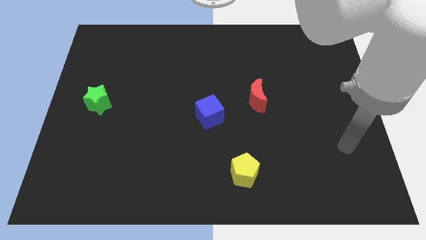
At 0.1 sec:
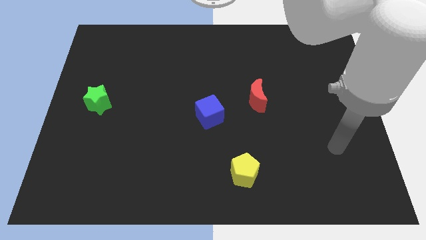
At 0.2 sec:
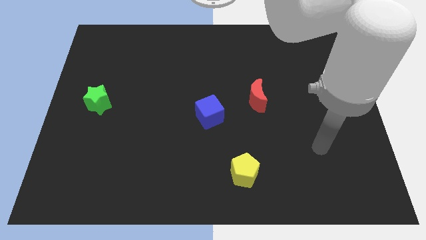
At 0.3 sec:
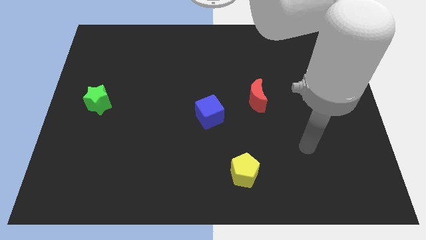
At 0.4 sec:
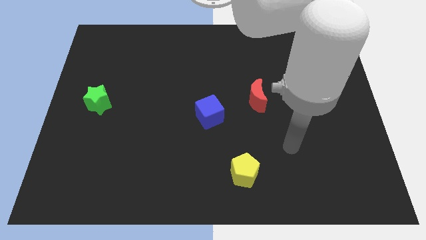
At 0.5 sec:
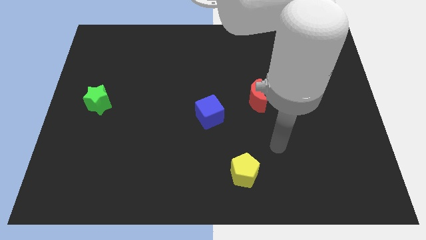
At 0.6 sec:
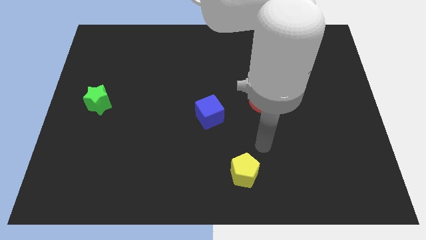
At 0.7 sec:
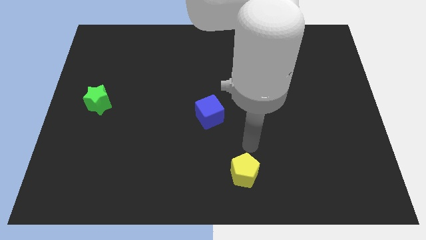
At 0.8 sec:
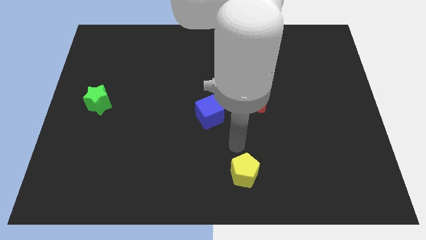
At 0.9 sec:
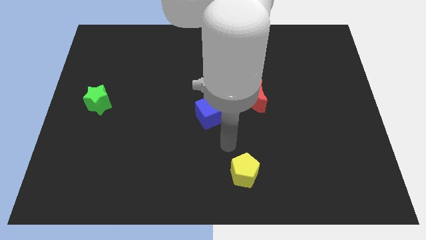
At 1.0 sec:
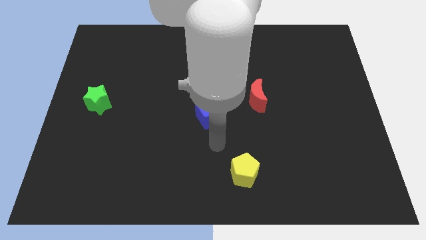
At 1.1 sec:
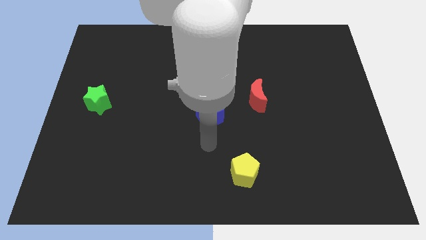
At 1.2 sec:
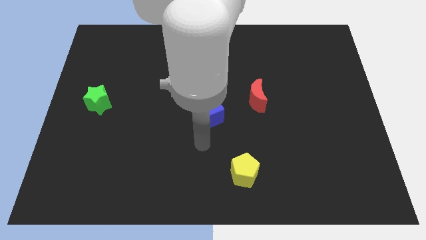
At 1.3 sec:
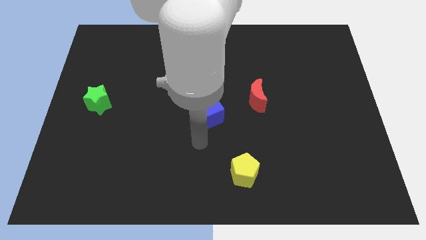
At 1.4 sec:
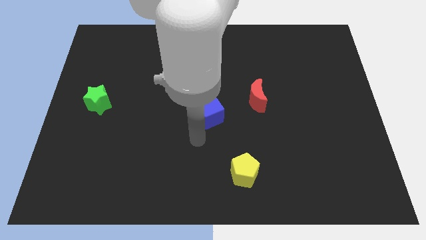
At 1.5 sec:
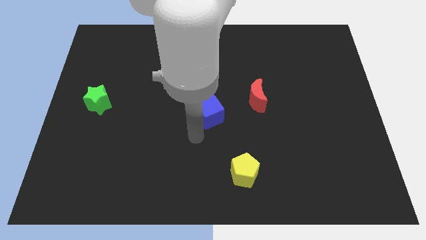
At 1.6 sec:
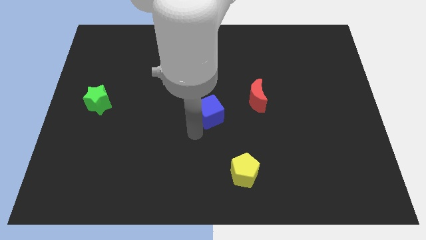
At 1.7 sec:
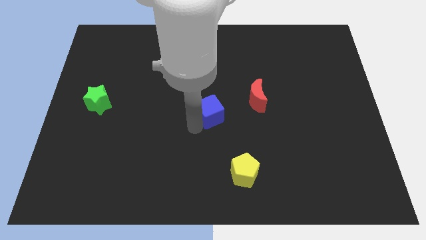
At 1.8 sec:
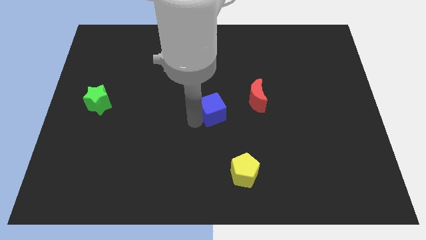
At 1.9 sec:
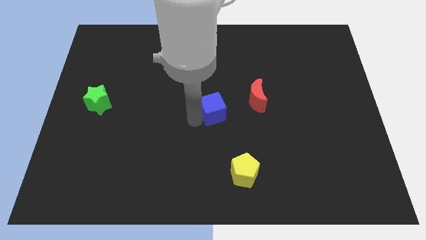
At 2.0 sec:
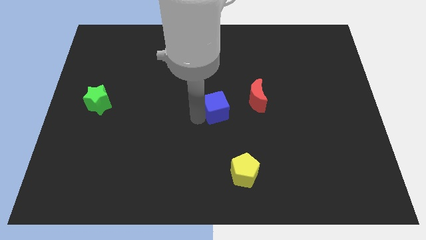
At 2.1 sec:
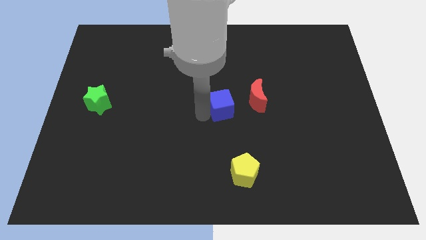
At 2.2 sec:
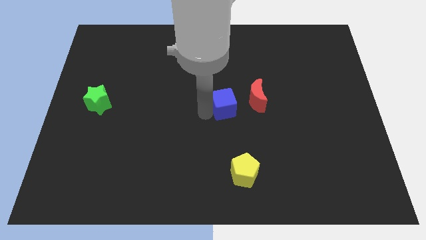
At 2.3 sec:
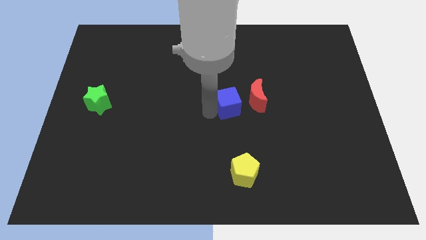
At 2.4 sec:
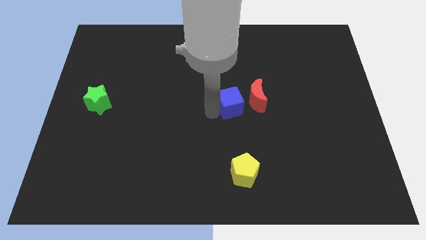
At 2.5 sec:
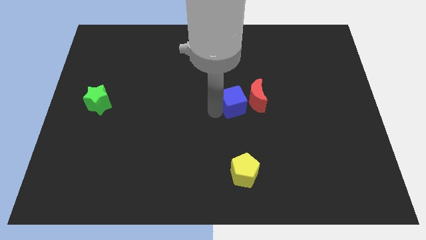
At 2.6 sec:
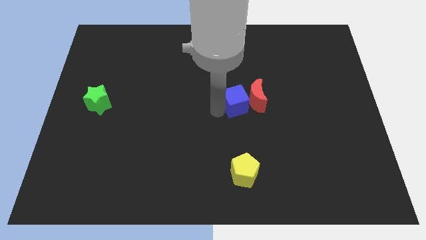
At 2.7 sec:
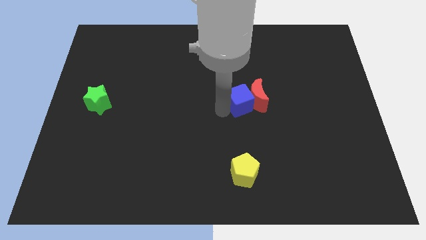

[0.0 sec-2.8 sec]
slide the cube to the moon

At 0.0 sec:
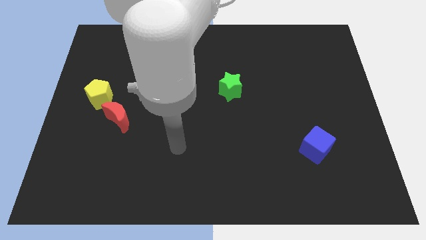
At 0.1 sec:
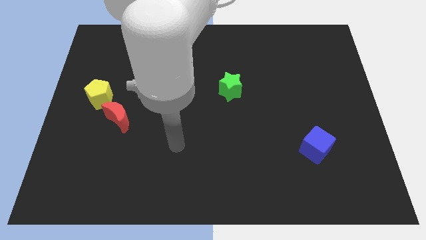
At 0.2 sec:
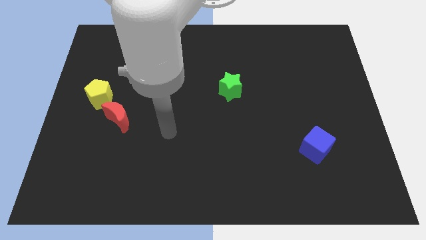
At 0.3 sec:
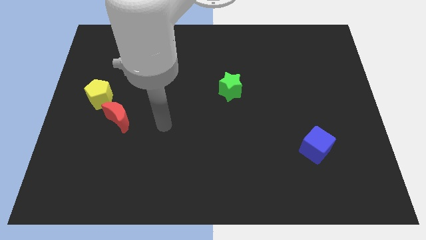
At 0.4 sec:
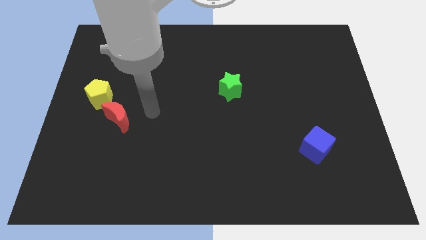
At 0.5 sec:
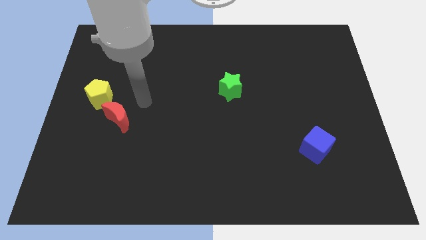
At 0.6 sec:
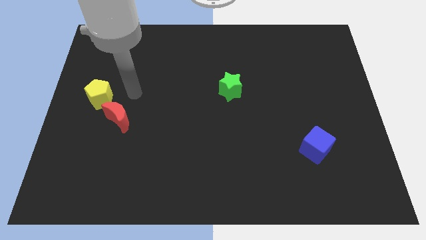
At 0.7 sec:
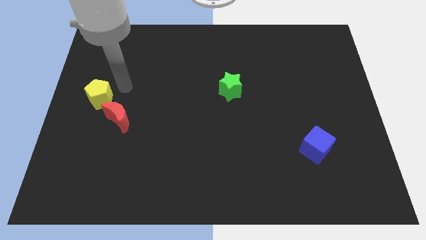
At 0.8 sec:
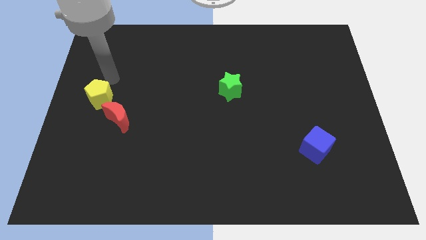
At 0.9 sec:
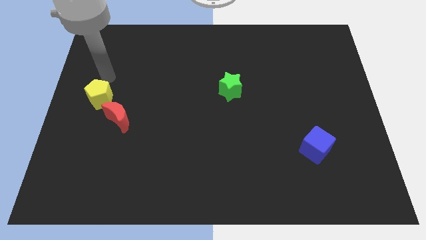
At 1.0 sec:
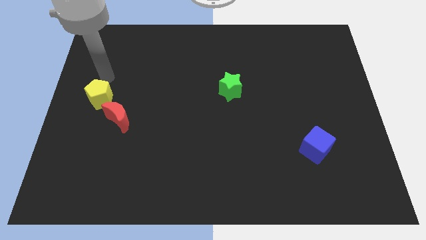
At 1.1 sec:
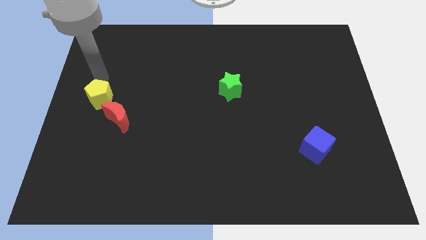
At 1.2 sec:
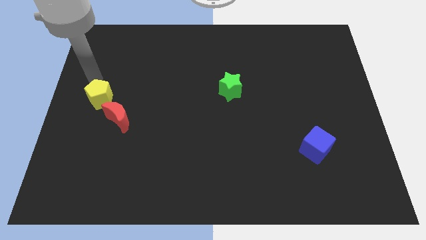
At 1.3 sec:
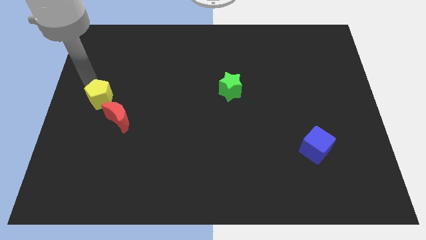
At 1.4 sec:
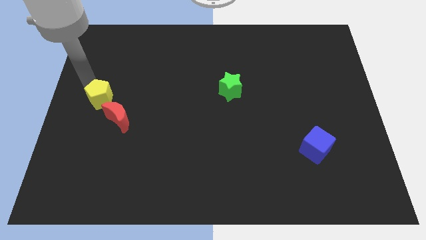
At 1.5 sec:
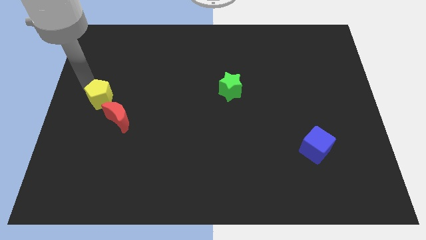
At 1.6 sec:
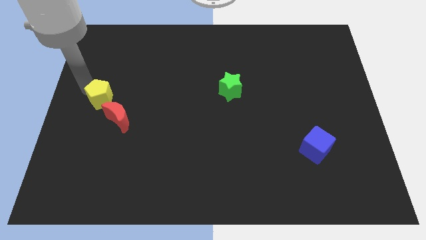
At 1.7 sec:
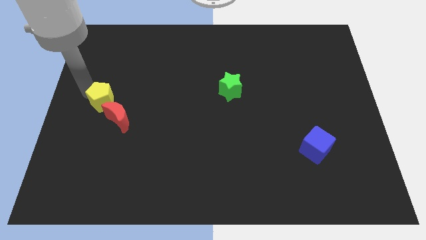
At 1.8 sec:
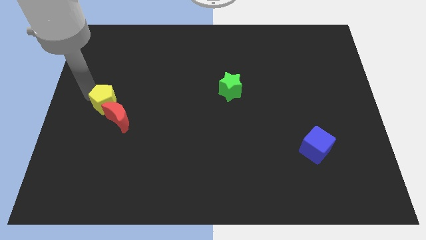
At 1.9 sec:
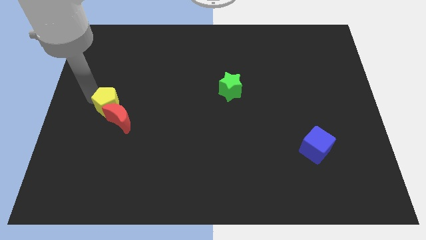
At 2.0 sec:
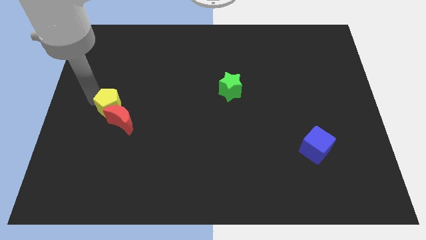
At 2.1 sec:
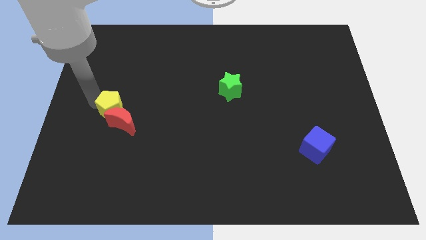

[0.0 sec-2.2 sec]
push the pentagon towards the red block

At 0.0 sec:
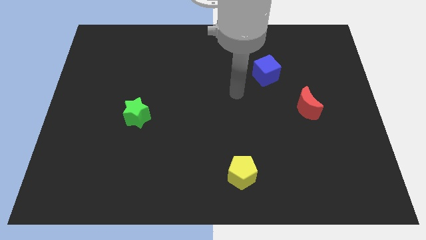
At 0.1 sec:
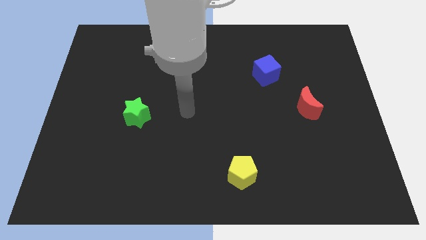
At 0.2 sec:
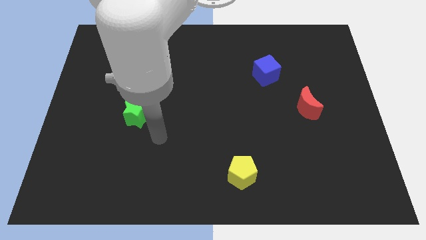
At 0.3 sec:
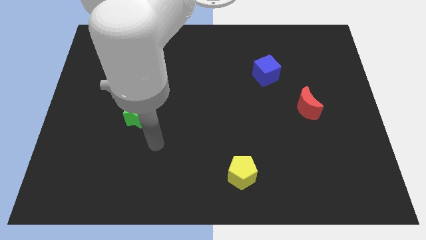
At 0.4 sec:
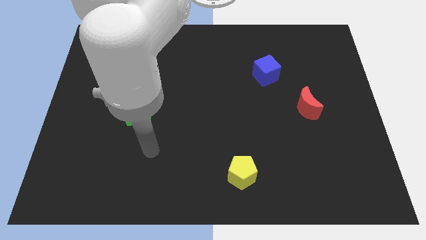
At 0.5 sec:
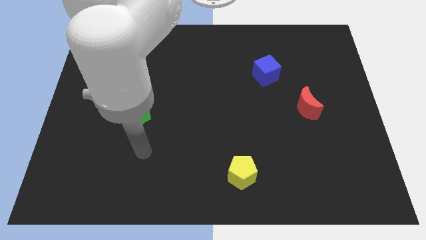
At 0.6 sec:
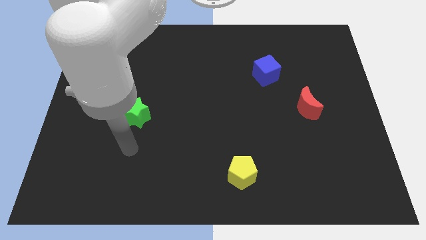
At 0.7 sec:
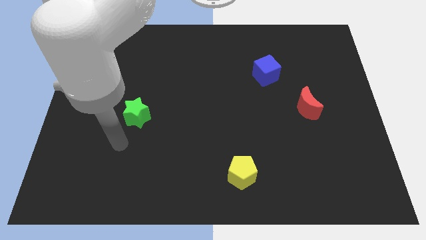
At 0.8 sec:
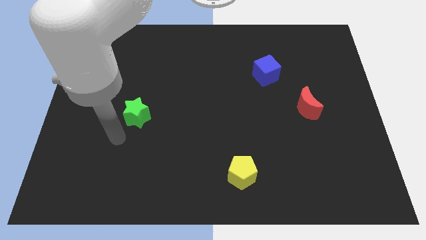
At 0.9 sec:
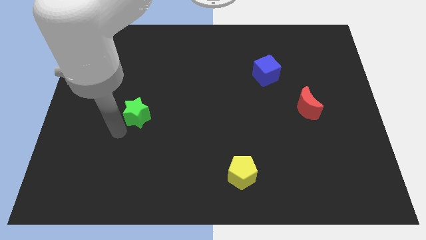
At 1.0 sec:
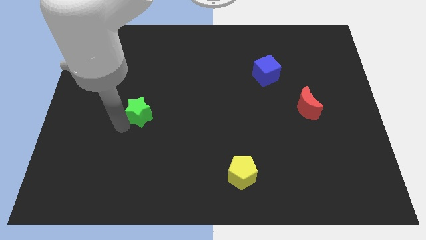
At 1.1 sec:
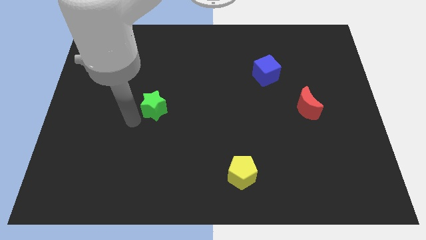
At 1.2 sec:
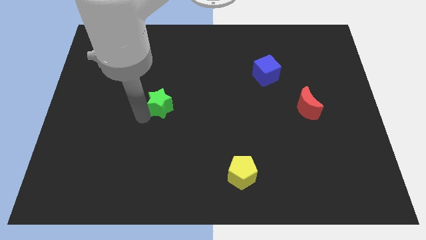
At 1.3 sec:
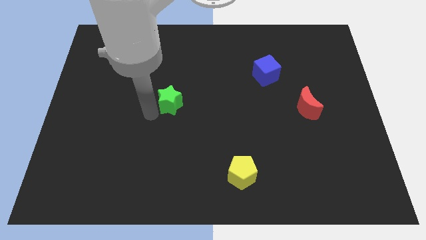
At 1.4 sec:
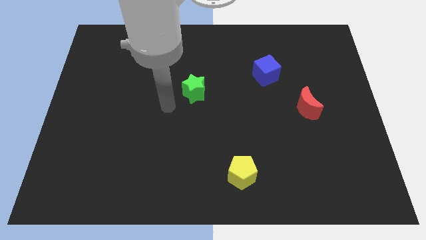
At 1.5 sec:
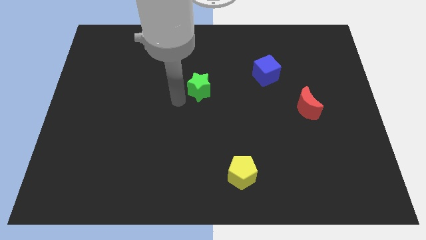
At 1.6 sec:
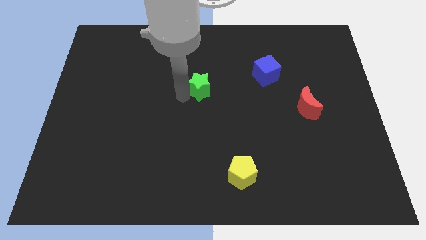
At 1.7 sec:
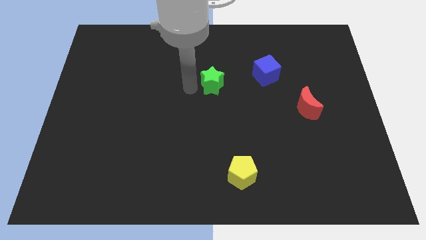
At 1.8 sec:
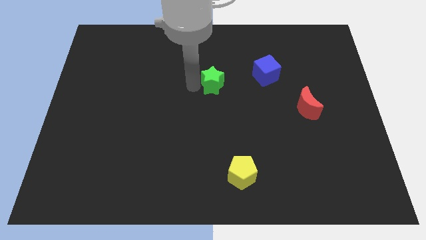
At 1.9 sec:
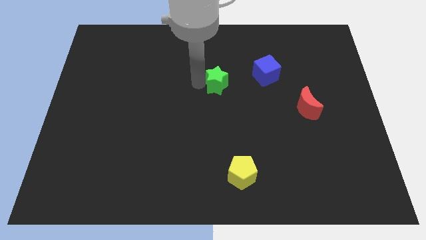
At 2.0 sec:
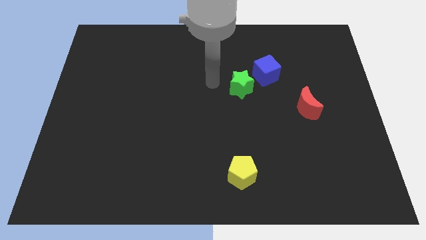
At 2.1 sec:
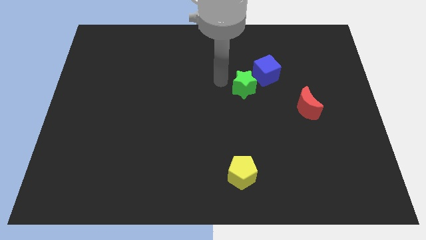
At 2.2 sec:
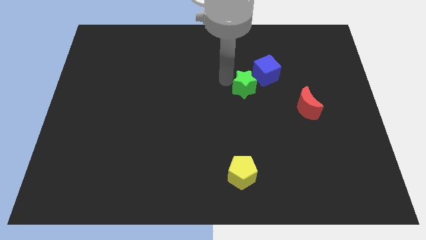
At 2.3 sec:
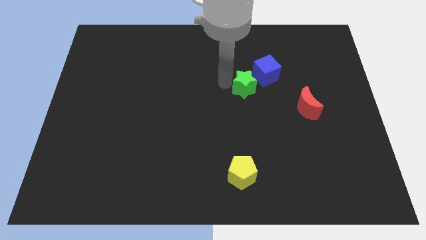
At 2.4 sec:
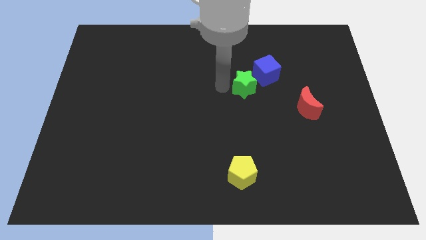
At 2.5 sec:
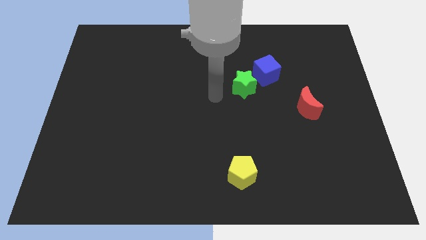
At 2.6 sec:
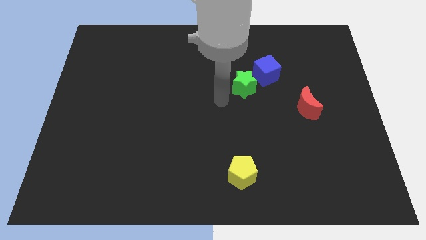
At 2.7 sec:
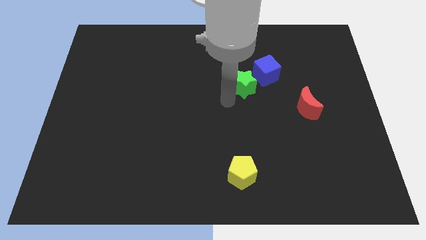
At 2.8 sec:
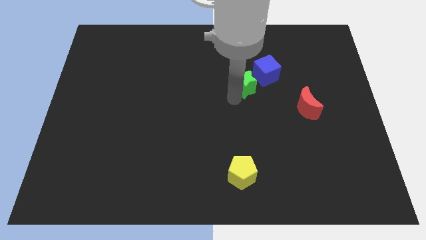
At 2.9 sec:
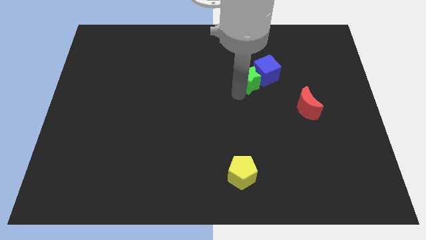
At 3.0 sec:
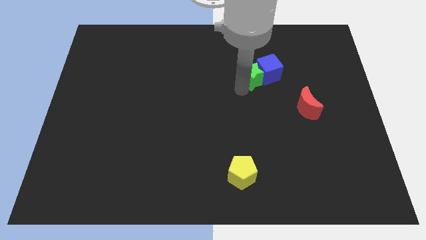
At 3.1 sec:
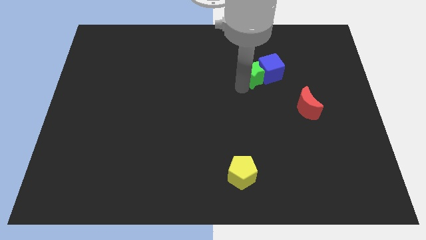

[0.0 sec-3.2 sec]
slide the green star to the cube
